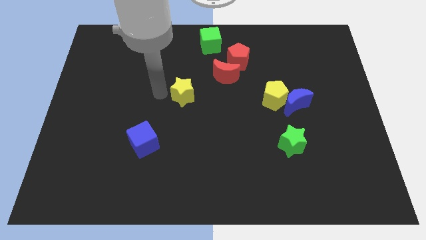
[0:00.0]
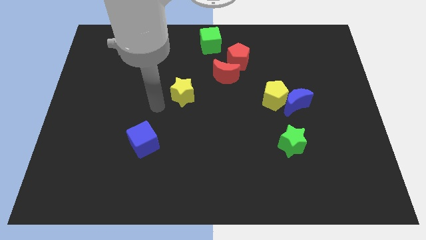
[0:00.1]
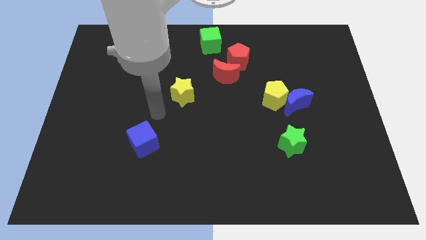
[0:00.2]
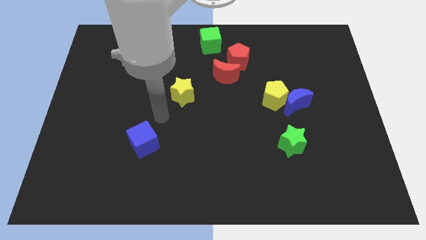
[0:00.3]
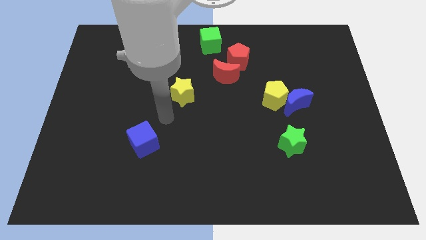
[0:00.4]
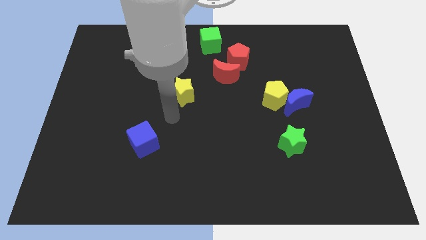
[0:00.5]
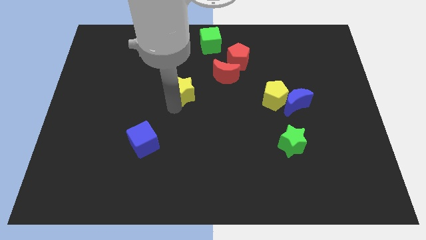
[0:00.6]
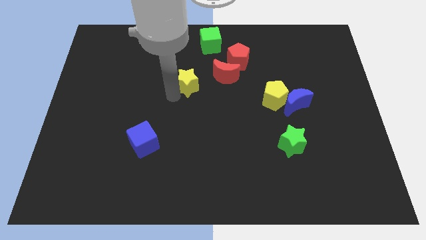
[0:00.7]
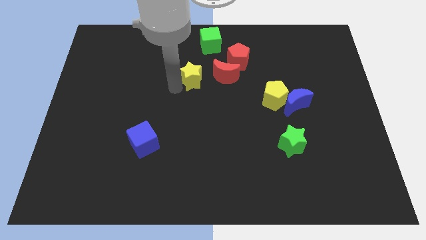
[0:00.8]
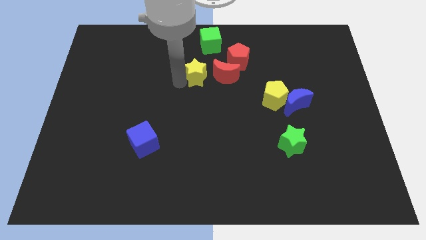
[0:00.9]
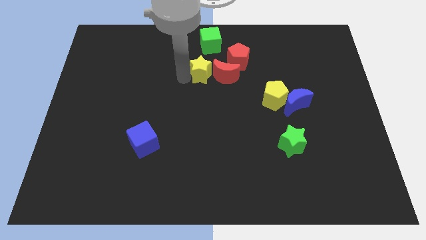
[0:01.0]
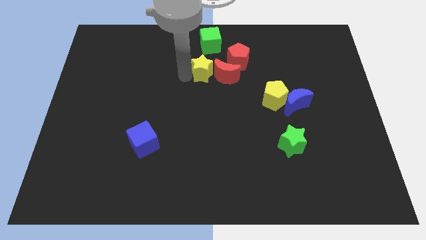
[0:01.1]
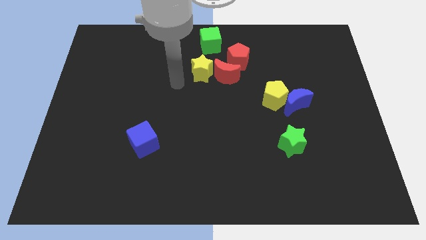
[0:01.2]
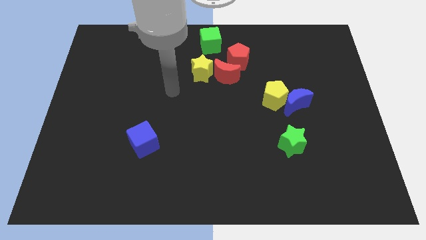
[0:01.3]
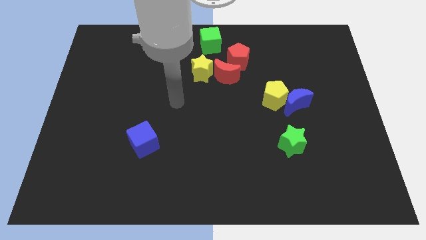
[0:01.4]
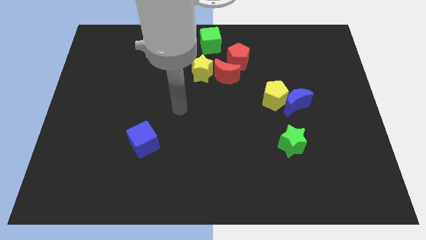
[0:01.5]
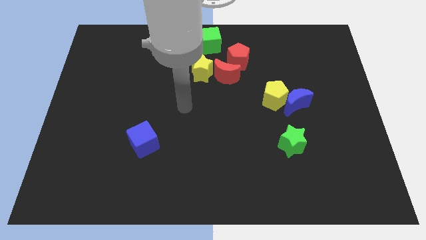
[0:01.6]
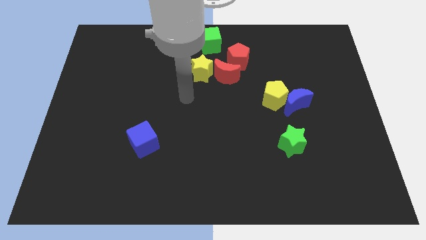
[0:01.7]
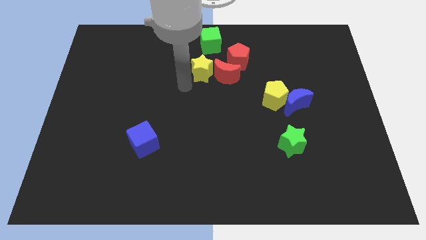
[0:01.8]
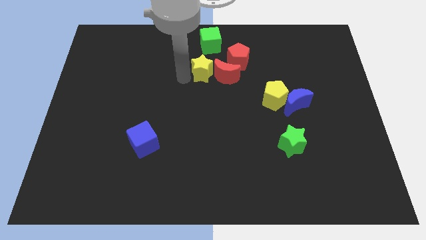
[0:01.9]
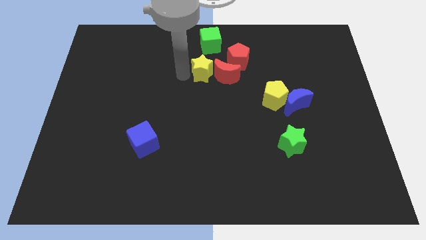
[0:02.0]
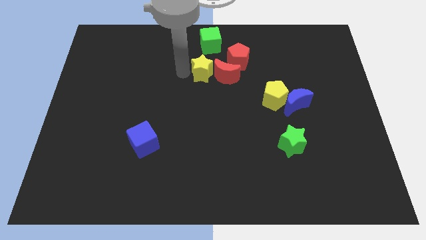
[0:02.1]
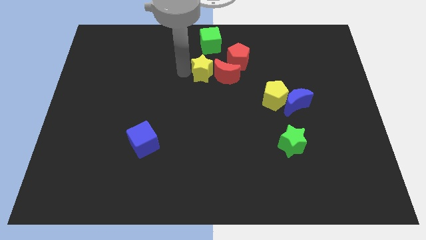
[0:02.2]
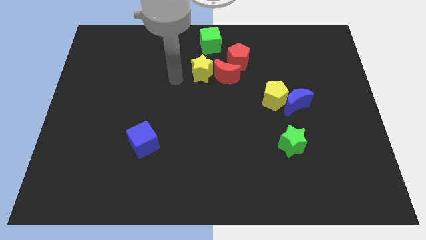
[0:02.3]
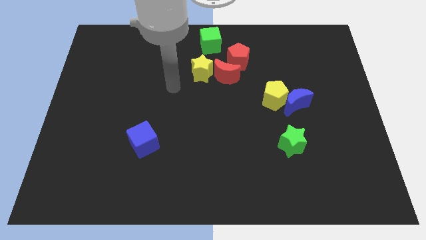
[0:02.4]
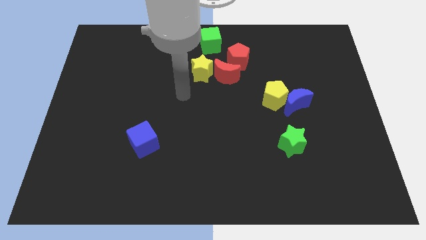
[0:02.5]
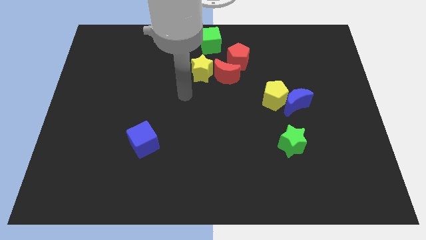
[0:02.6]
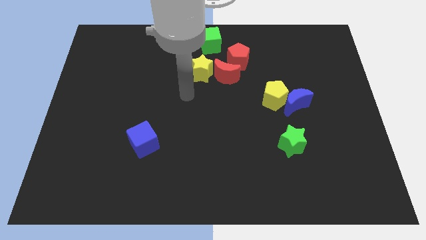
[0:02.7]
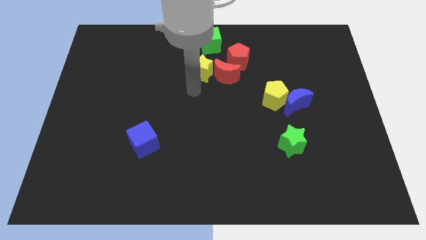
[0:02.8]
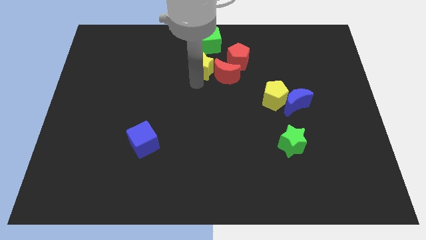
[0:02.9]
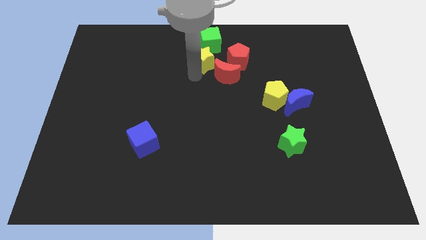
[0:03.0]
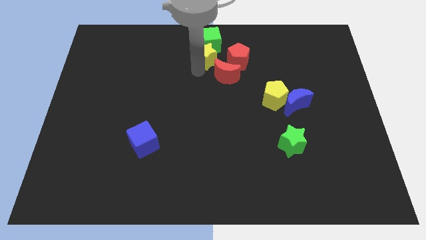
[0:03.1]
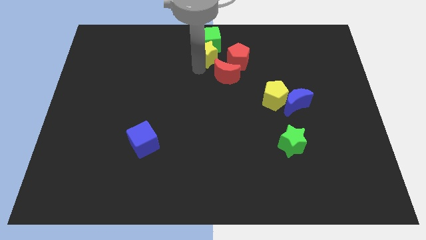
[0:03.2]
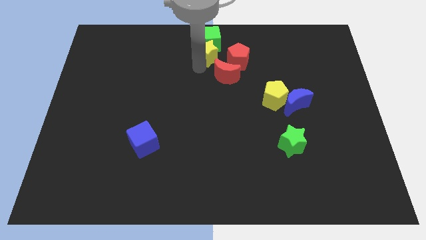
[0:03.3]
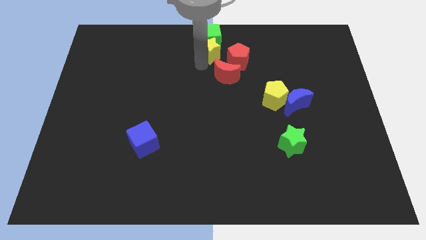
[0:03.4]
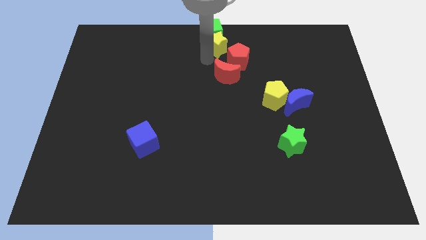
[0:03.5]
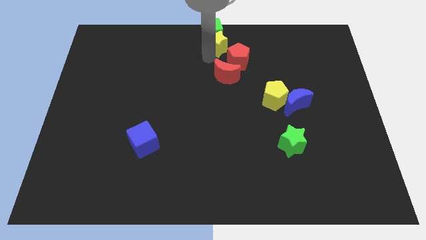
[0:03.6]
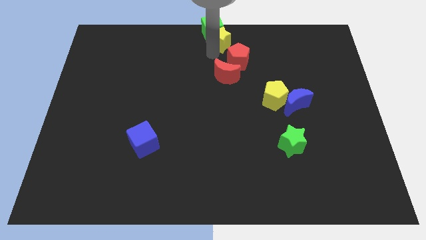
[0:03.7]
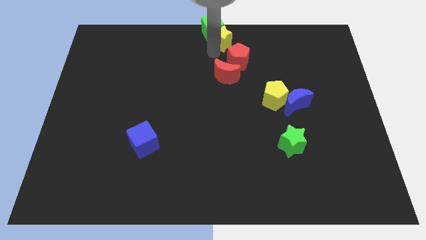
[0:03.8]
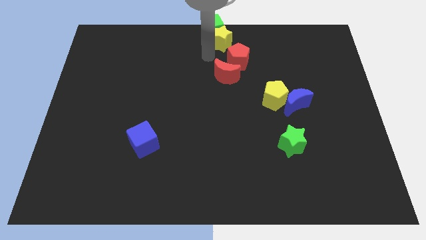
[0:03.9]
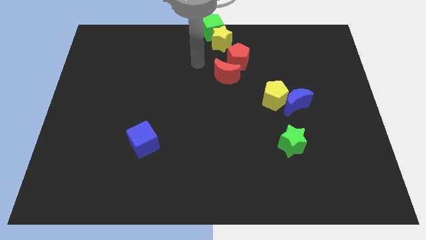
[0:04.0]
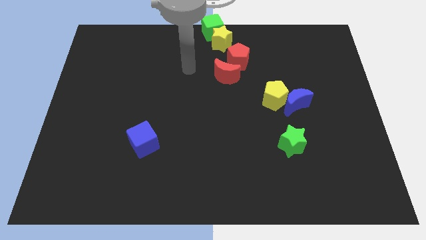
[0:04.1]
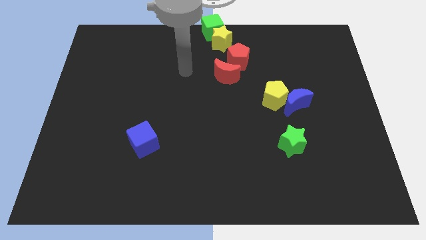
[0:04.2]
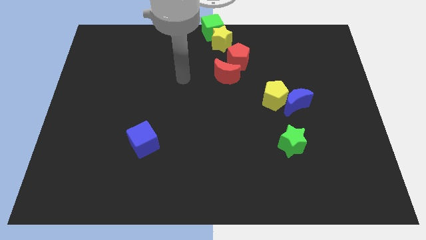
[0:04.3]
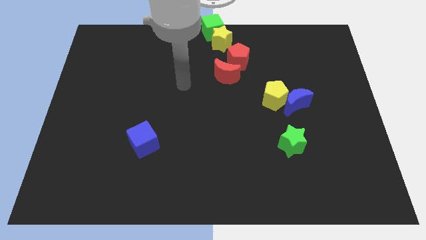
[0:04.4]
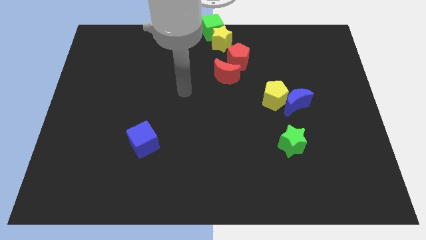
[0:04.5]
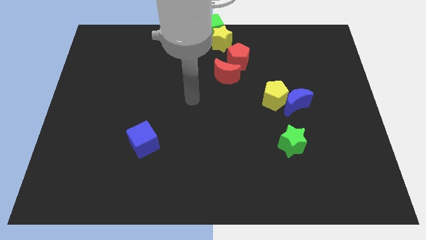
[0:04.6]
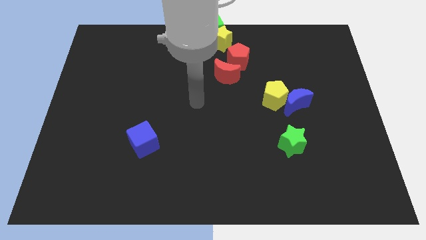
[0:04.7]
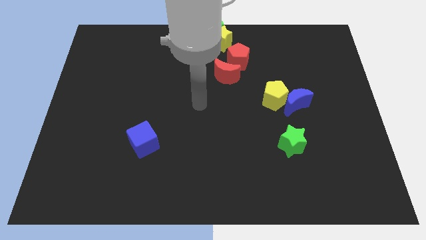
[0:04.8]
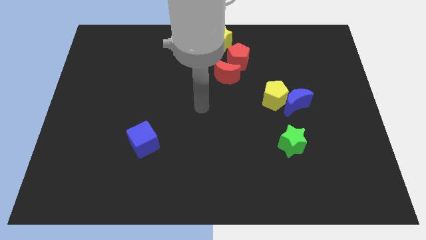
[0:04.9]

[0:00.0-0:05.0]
push the yellow star below the green cube

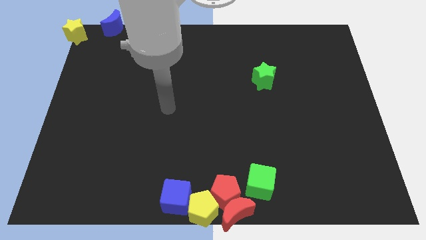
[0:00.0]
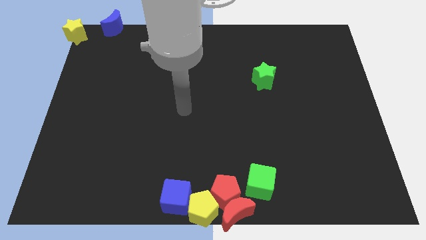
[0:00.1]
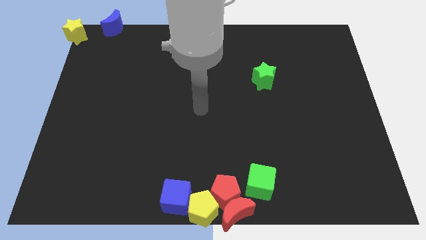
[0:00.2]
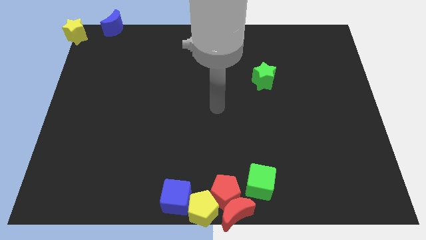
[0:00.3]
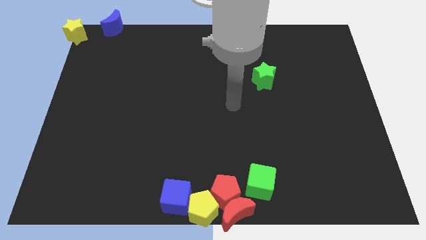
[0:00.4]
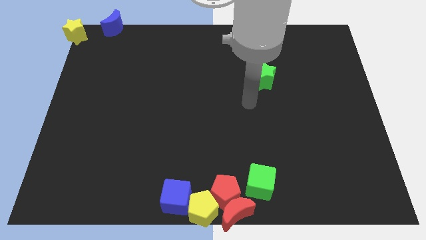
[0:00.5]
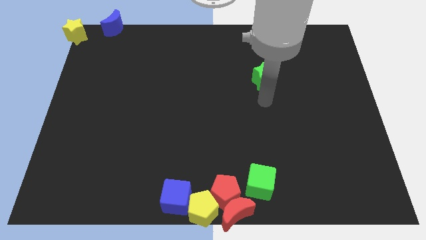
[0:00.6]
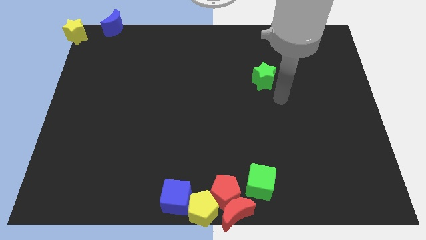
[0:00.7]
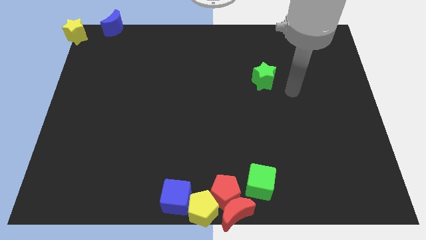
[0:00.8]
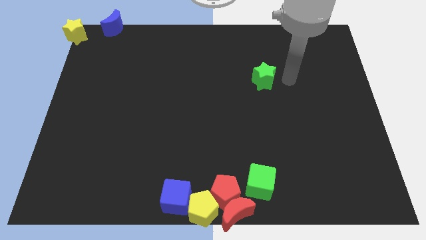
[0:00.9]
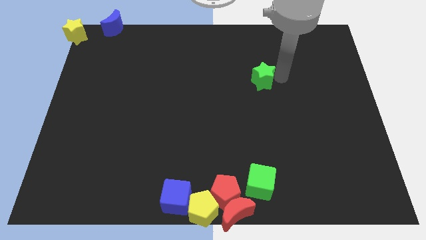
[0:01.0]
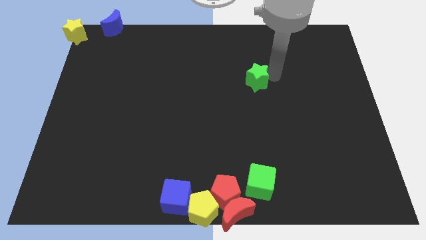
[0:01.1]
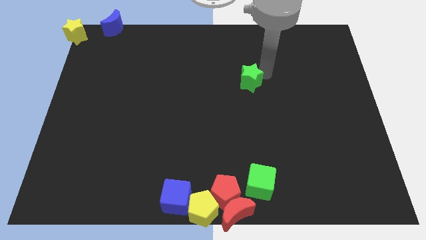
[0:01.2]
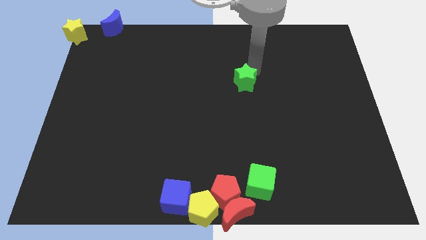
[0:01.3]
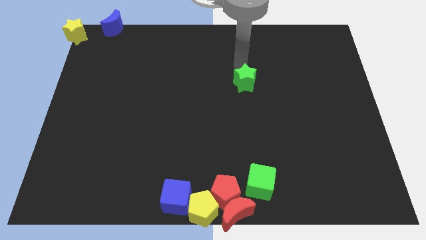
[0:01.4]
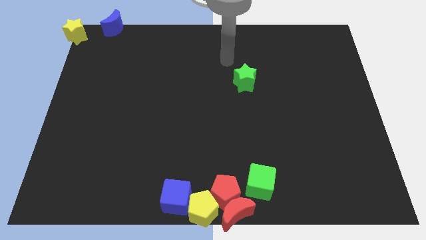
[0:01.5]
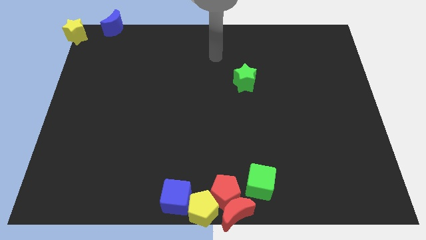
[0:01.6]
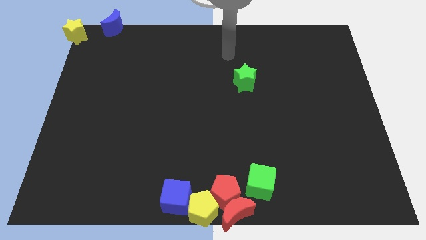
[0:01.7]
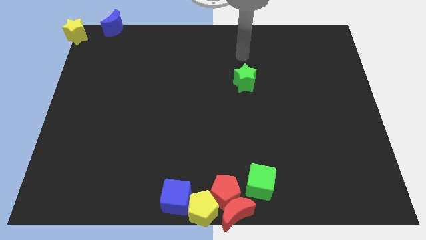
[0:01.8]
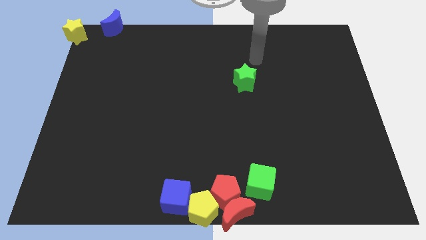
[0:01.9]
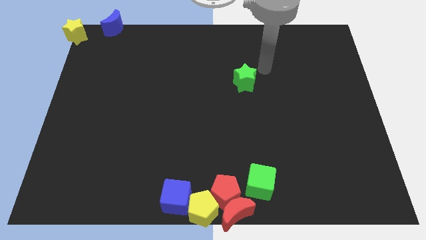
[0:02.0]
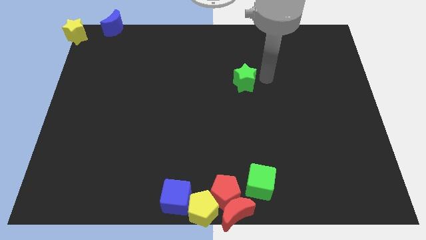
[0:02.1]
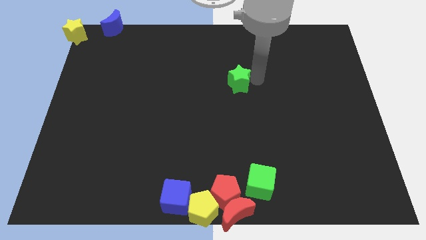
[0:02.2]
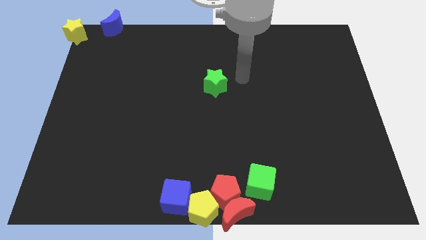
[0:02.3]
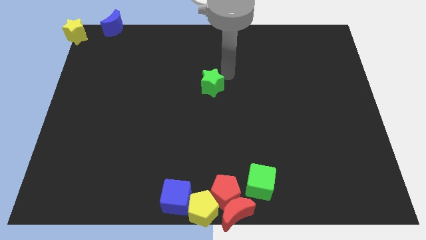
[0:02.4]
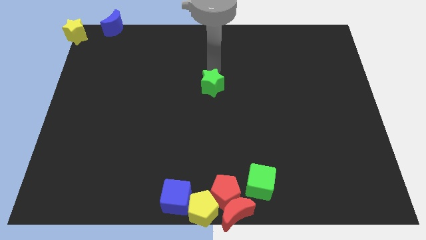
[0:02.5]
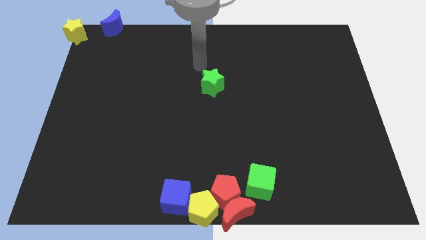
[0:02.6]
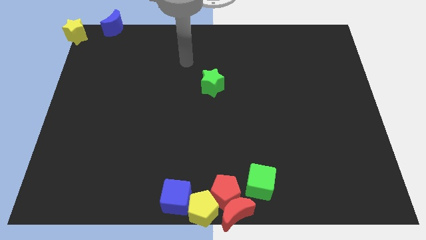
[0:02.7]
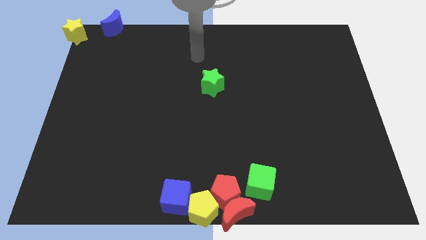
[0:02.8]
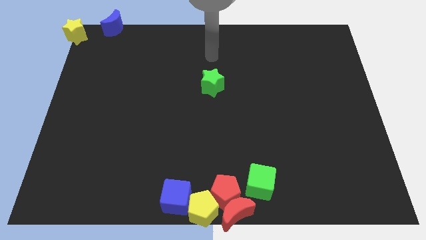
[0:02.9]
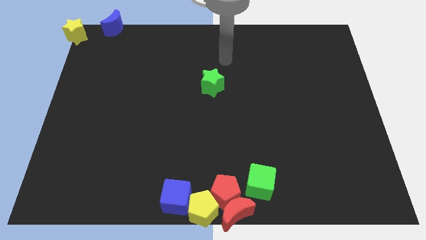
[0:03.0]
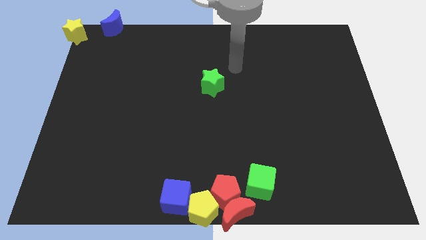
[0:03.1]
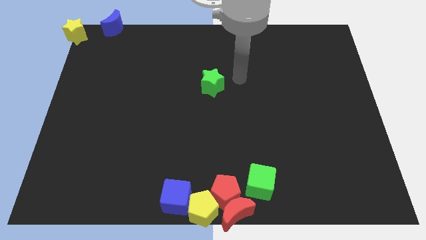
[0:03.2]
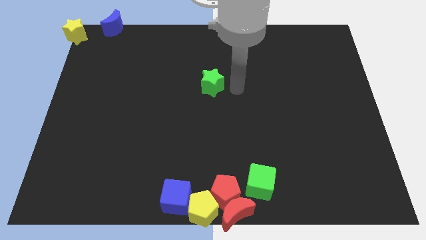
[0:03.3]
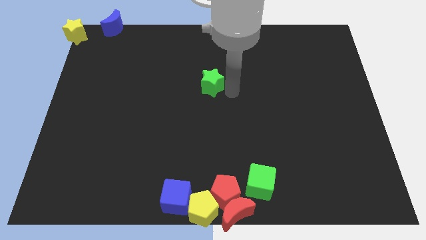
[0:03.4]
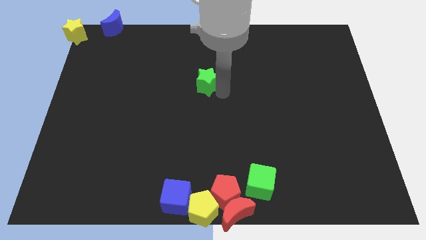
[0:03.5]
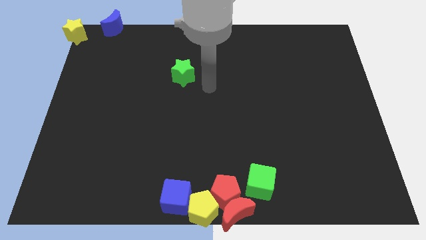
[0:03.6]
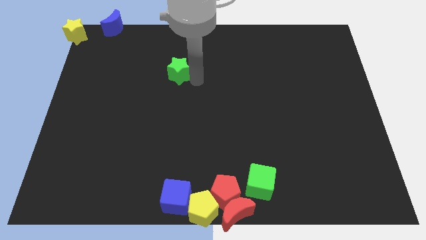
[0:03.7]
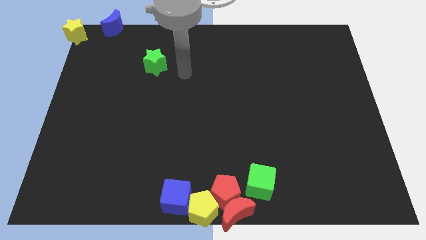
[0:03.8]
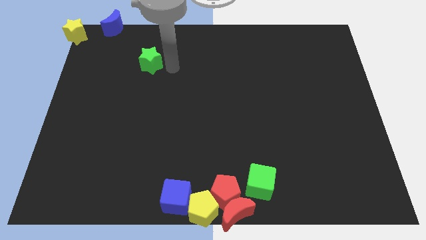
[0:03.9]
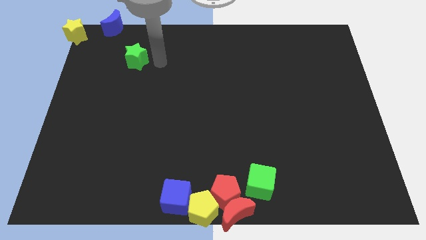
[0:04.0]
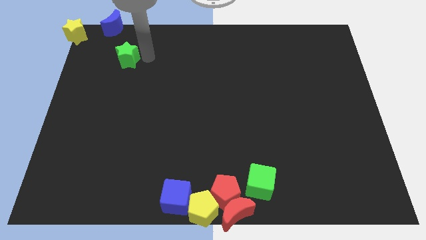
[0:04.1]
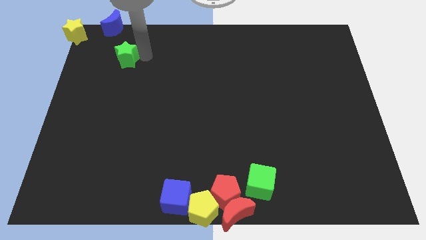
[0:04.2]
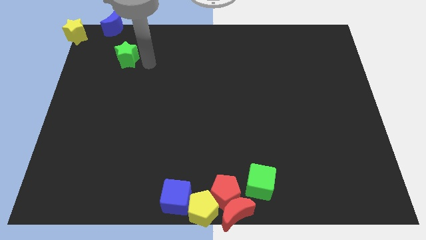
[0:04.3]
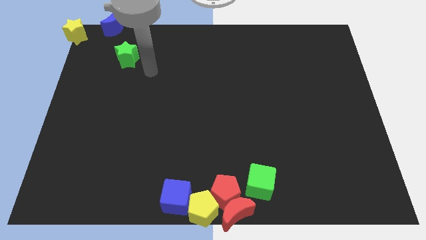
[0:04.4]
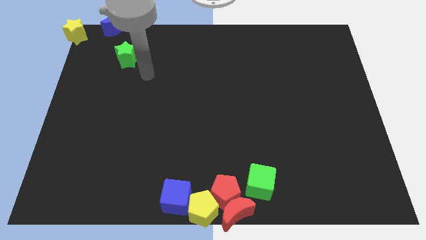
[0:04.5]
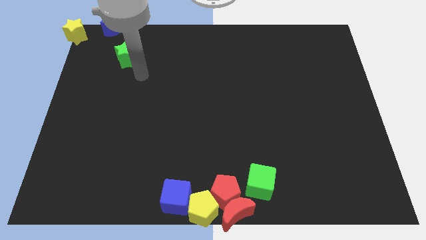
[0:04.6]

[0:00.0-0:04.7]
place the green star below the blue moon
